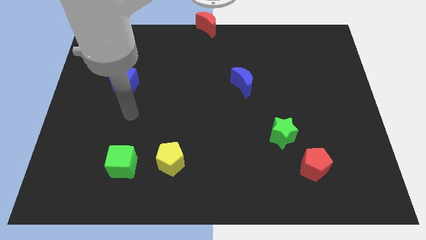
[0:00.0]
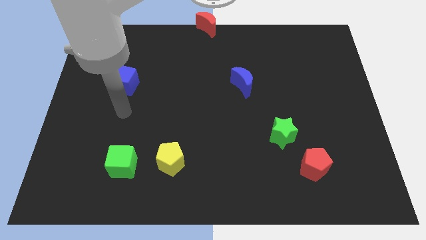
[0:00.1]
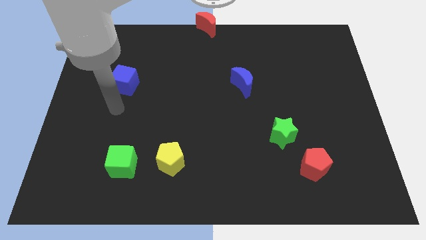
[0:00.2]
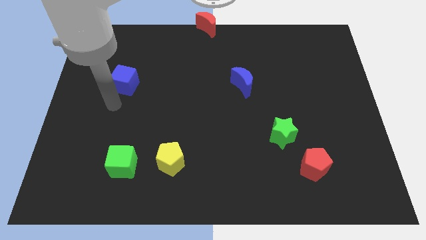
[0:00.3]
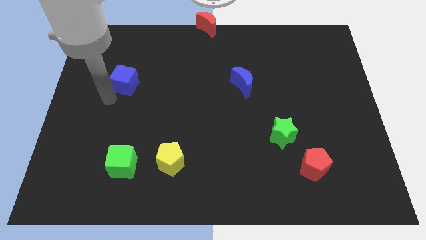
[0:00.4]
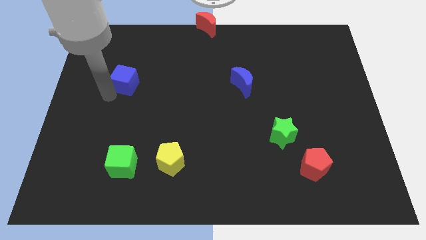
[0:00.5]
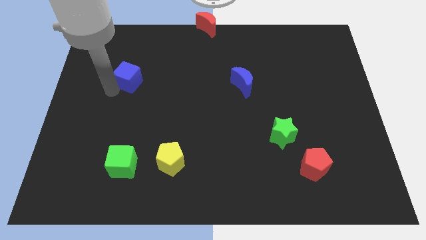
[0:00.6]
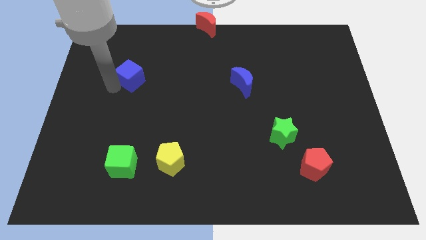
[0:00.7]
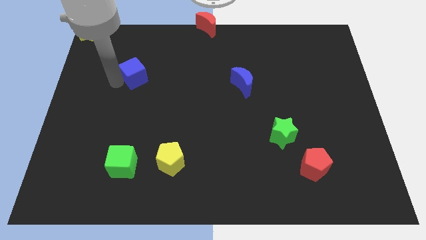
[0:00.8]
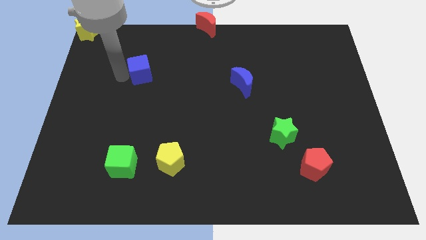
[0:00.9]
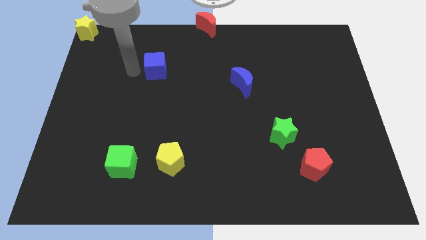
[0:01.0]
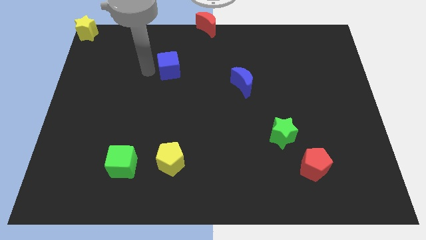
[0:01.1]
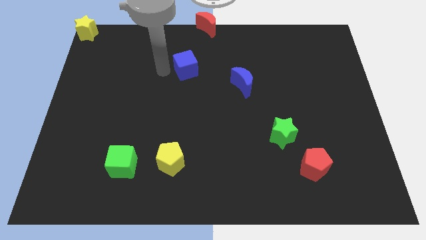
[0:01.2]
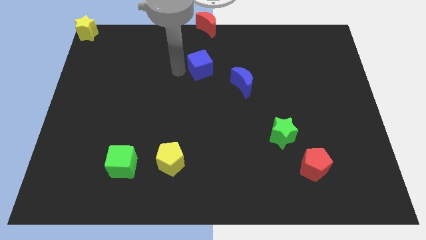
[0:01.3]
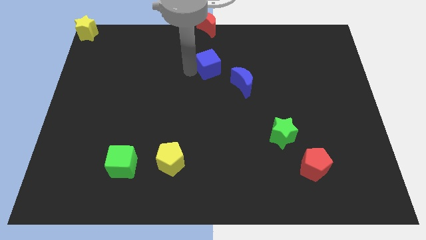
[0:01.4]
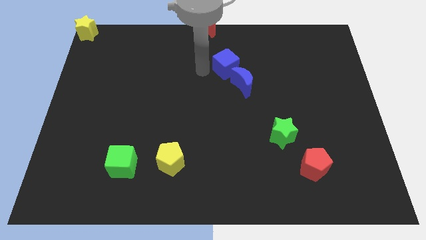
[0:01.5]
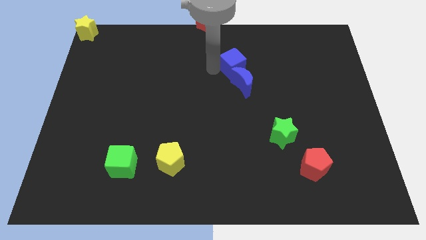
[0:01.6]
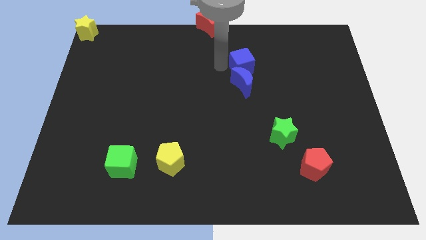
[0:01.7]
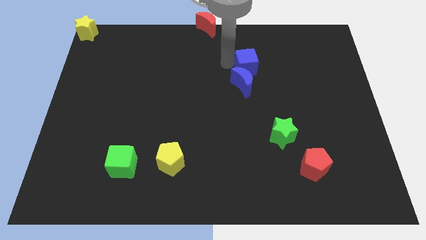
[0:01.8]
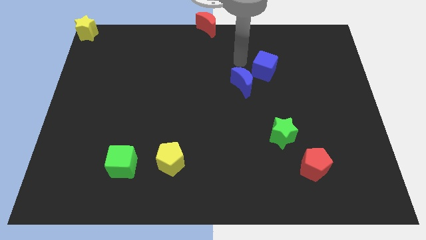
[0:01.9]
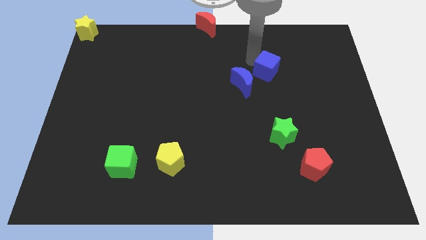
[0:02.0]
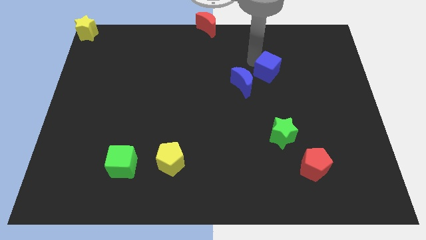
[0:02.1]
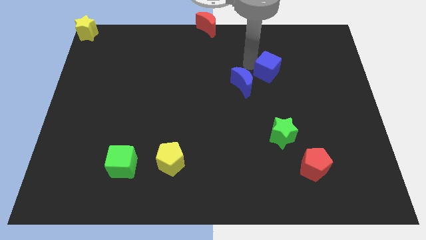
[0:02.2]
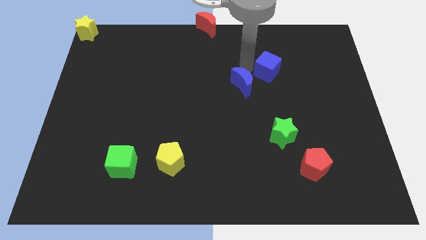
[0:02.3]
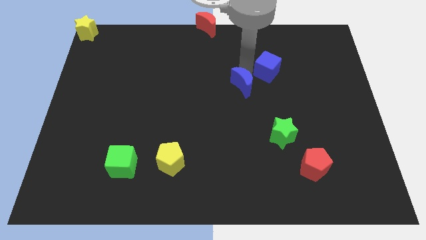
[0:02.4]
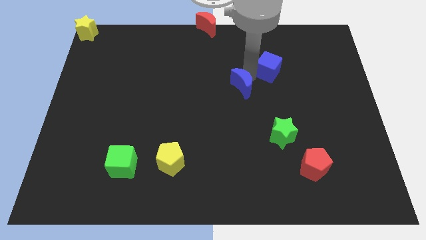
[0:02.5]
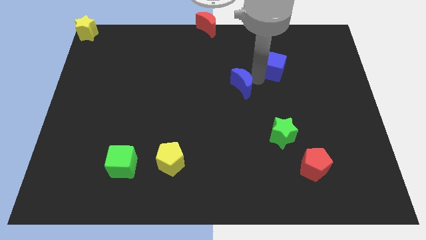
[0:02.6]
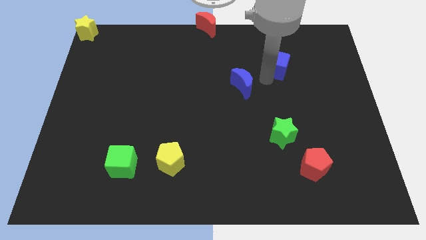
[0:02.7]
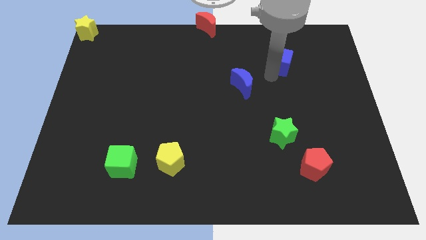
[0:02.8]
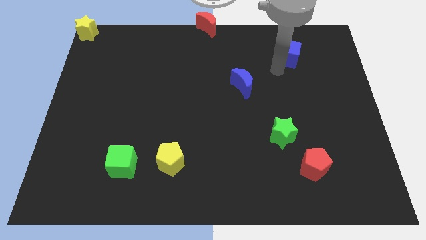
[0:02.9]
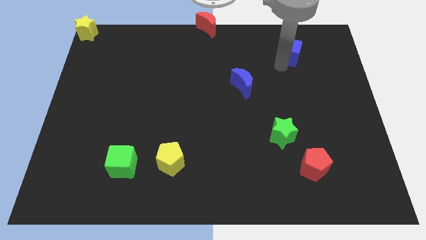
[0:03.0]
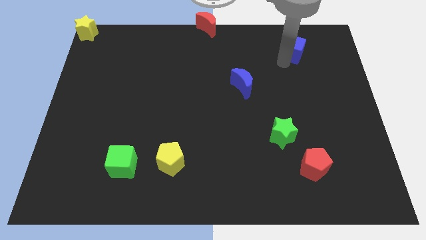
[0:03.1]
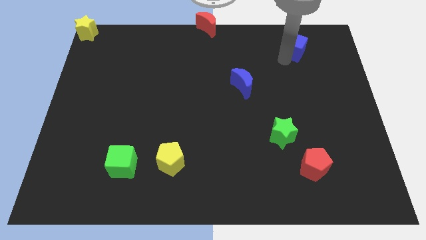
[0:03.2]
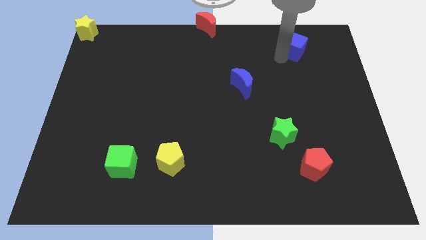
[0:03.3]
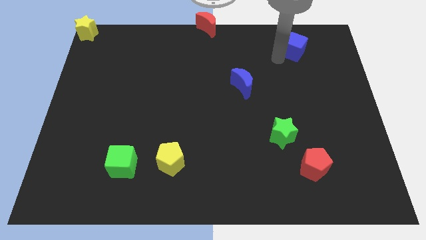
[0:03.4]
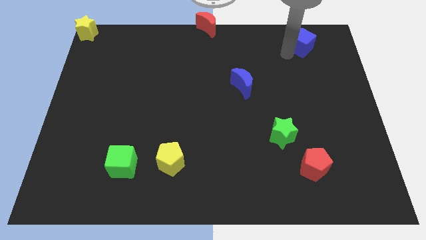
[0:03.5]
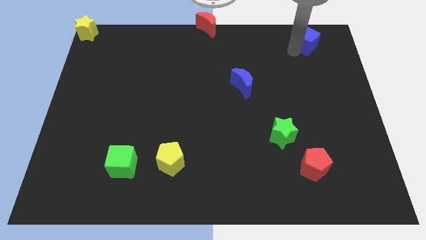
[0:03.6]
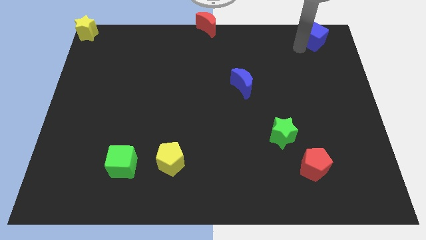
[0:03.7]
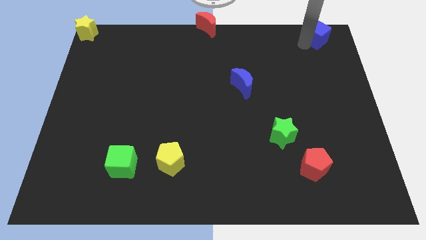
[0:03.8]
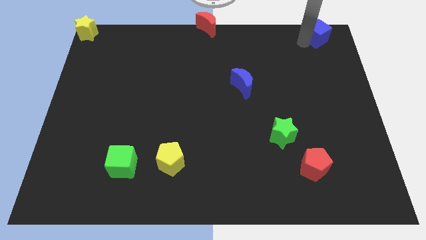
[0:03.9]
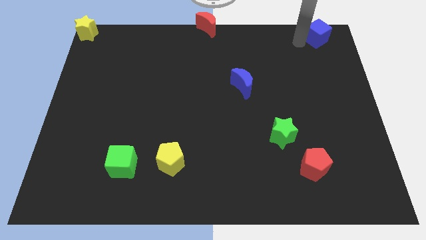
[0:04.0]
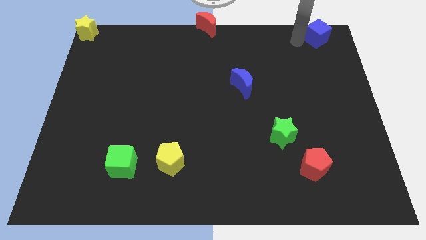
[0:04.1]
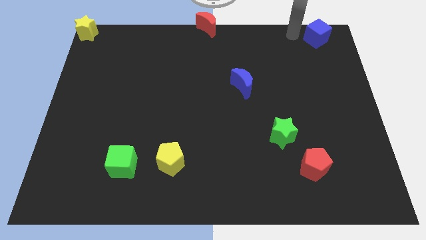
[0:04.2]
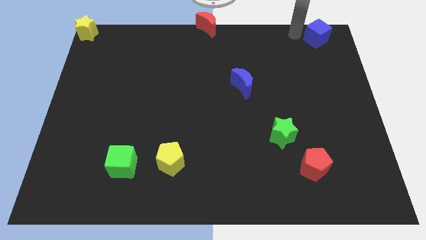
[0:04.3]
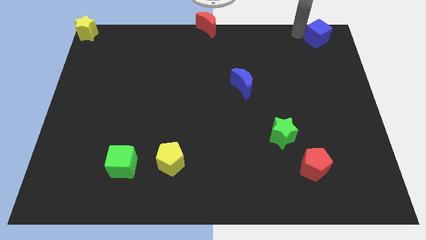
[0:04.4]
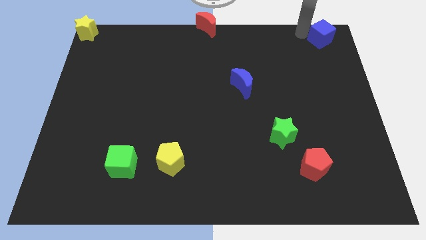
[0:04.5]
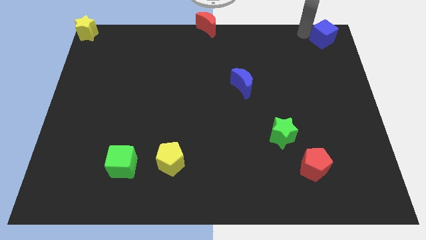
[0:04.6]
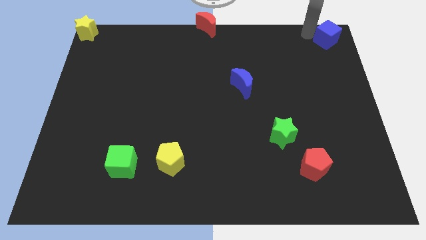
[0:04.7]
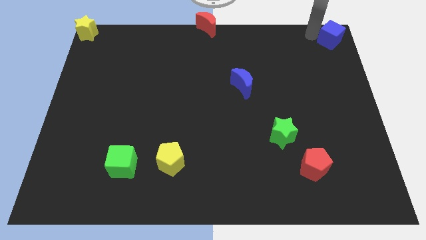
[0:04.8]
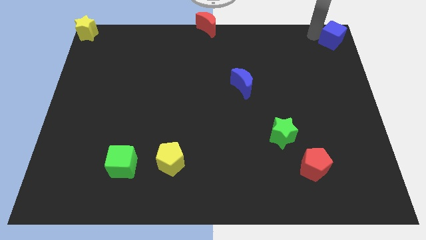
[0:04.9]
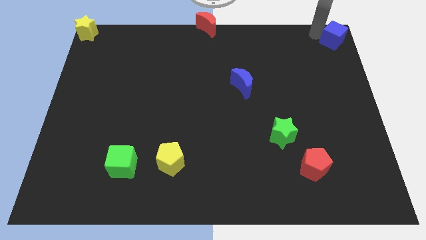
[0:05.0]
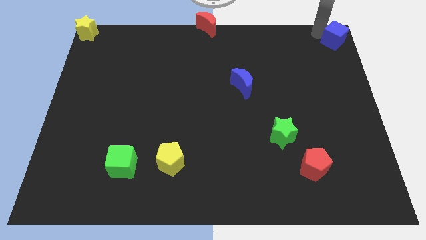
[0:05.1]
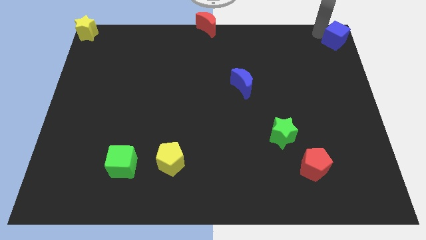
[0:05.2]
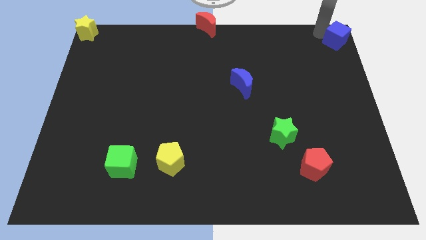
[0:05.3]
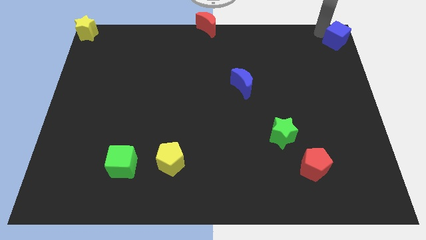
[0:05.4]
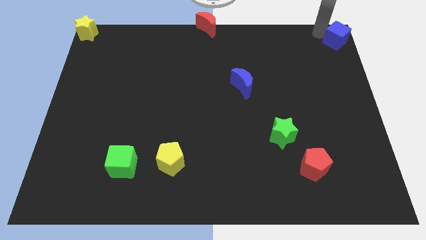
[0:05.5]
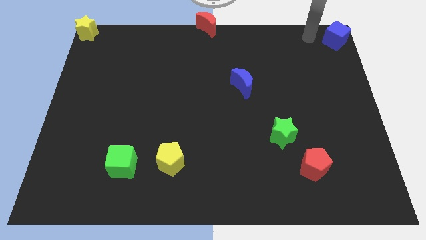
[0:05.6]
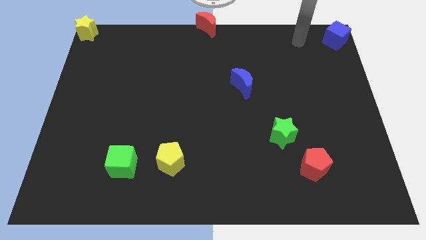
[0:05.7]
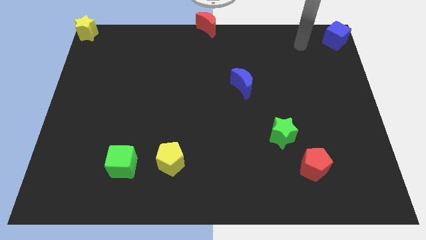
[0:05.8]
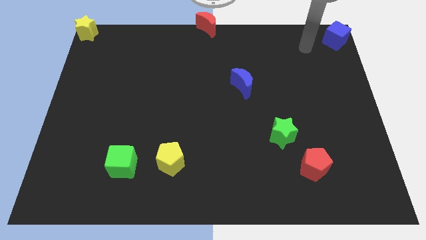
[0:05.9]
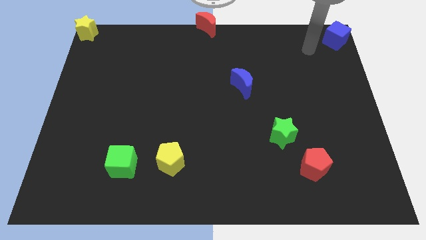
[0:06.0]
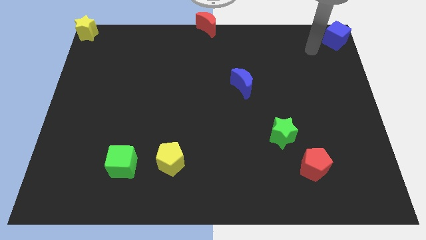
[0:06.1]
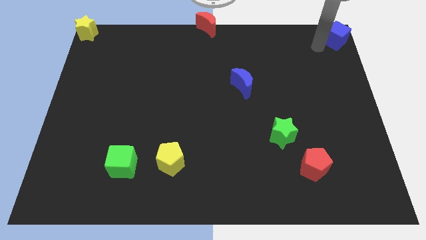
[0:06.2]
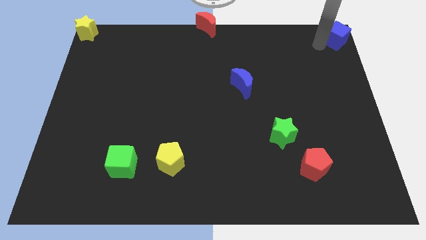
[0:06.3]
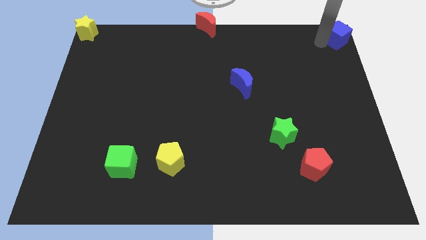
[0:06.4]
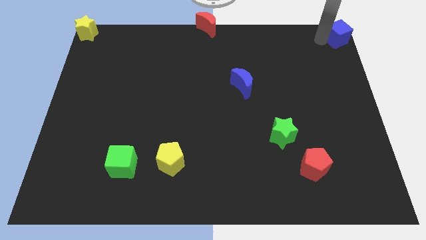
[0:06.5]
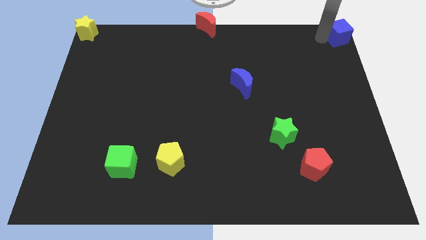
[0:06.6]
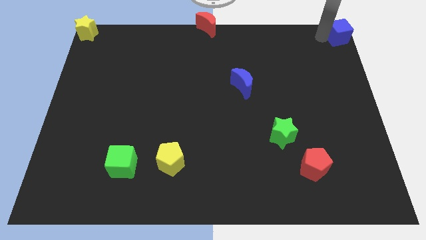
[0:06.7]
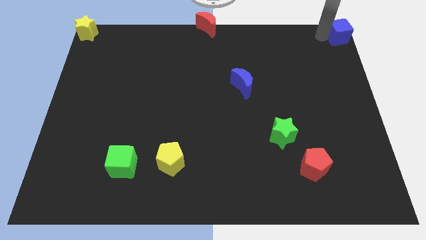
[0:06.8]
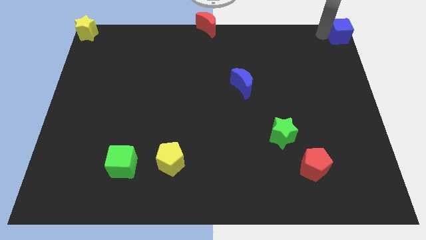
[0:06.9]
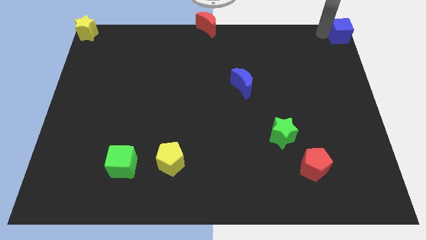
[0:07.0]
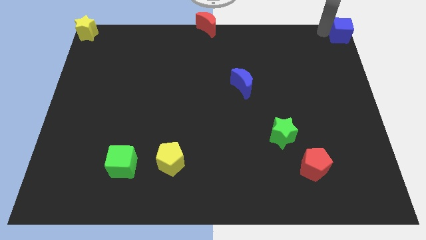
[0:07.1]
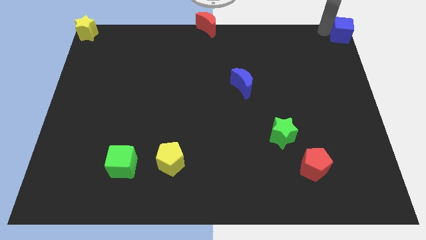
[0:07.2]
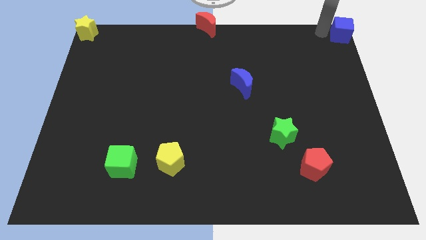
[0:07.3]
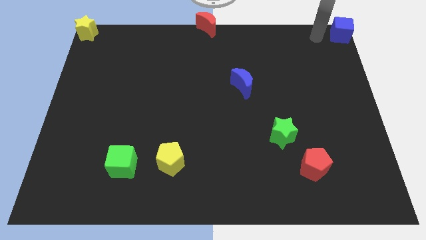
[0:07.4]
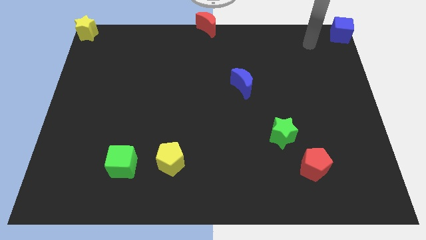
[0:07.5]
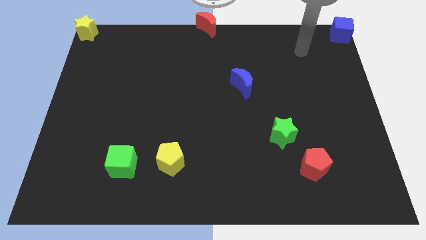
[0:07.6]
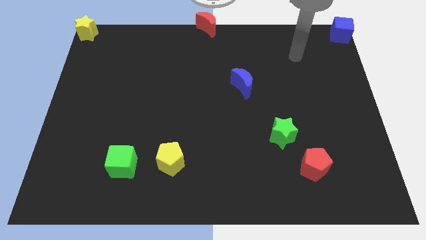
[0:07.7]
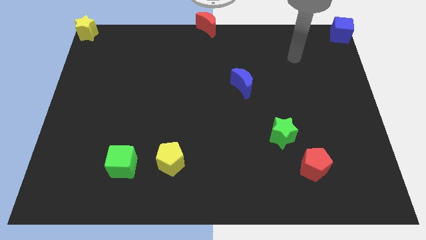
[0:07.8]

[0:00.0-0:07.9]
push the blue cube to the top right corner

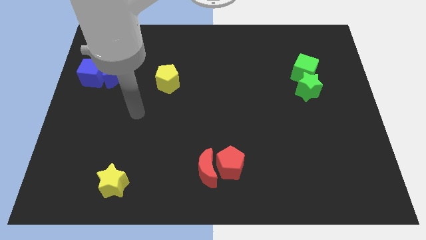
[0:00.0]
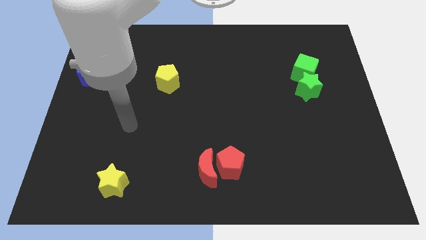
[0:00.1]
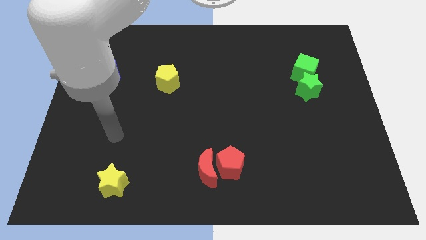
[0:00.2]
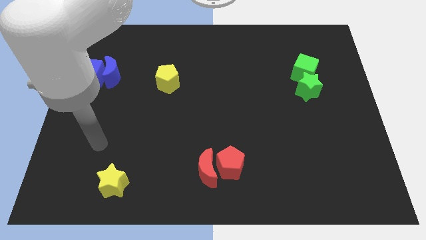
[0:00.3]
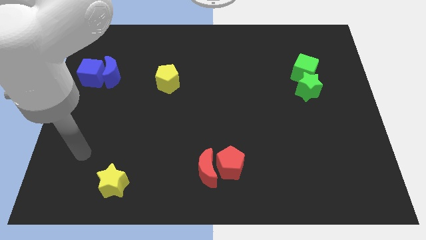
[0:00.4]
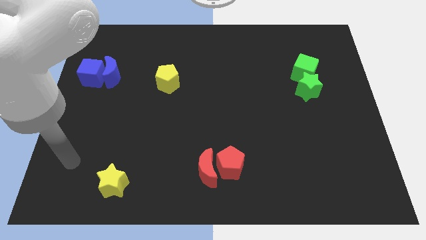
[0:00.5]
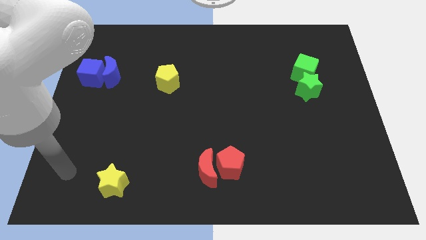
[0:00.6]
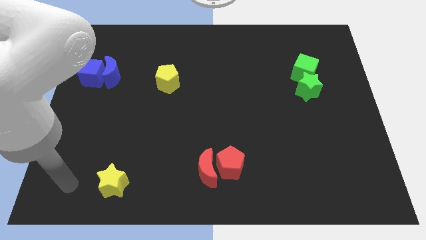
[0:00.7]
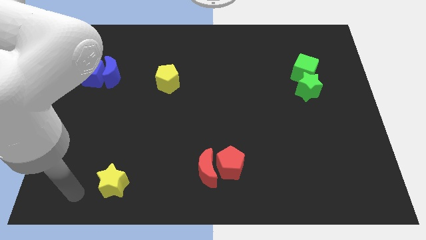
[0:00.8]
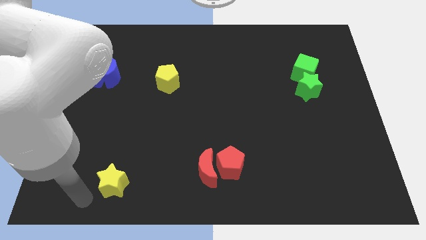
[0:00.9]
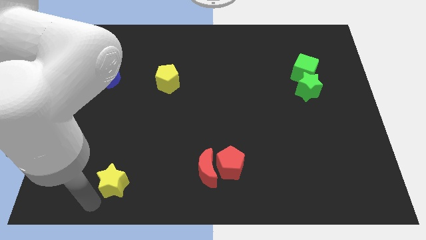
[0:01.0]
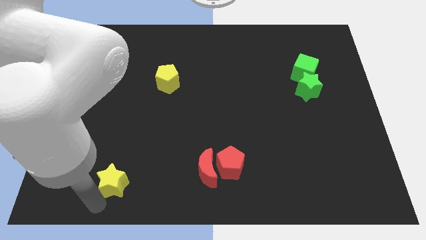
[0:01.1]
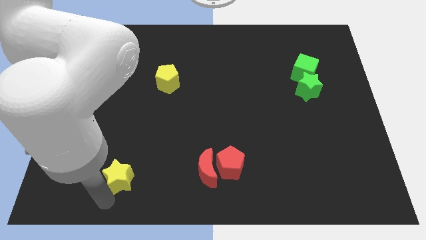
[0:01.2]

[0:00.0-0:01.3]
place your hand below the yellow star
